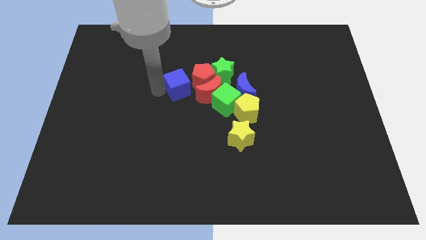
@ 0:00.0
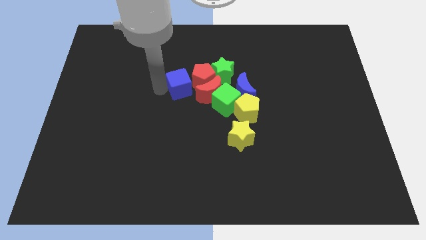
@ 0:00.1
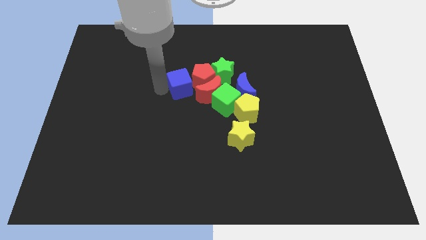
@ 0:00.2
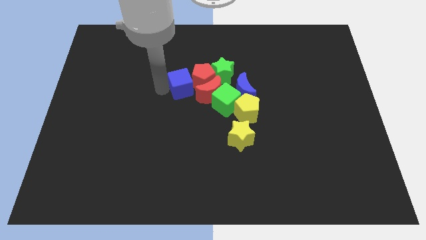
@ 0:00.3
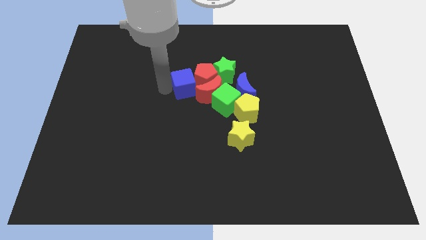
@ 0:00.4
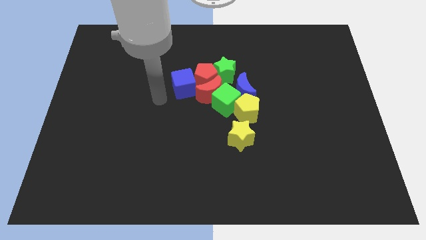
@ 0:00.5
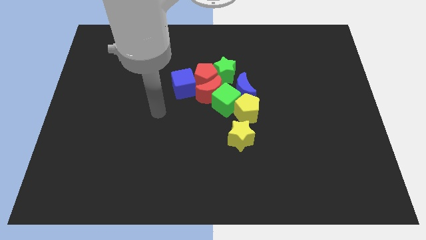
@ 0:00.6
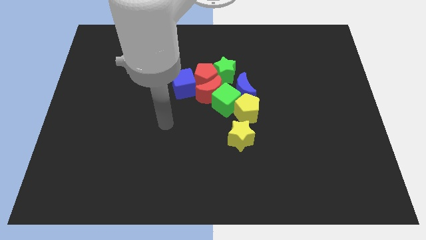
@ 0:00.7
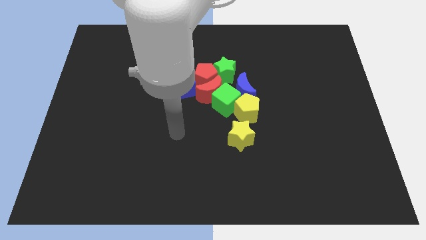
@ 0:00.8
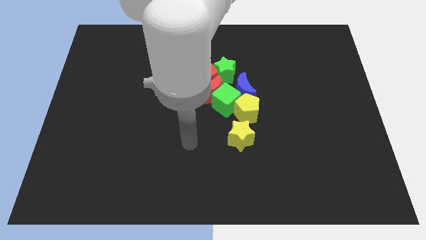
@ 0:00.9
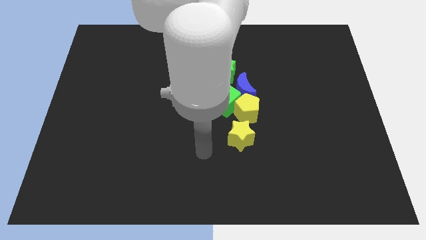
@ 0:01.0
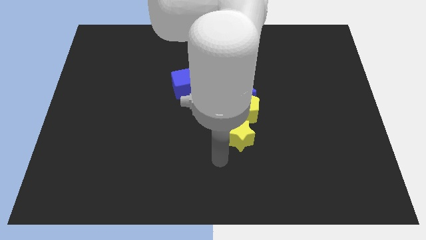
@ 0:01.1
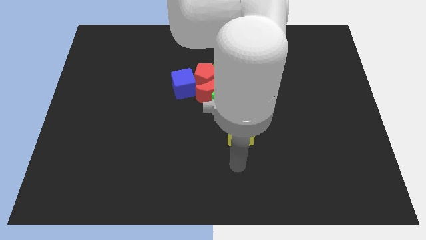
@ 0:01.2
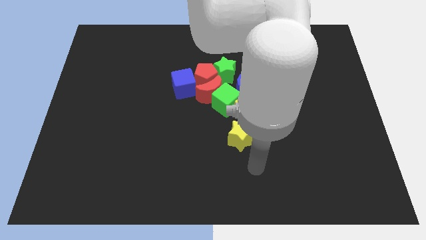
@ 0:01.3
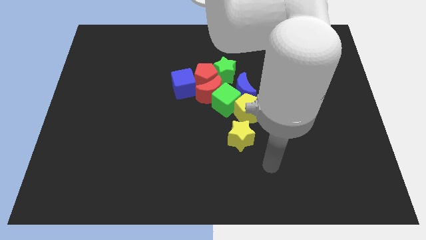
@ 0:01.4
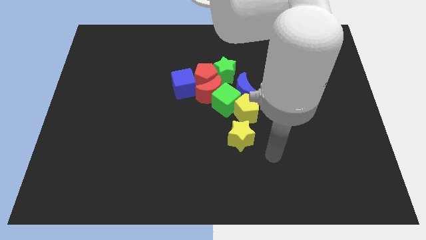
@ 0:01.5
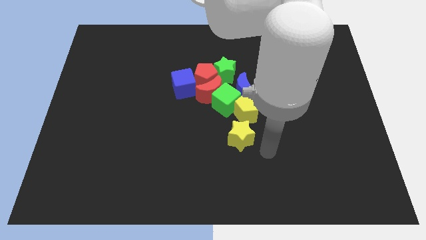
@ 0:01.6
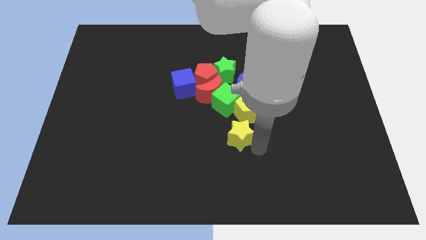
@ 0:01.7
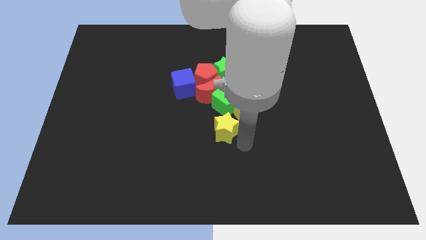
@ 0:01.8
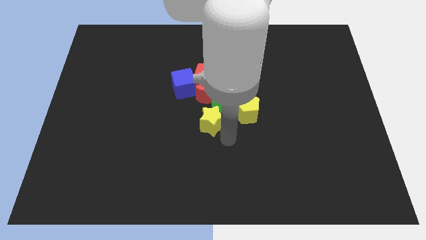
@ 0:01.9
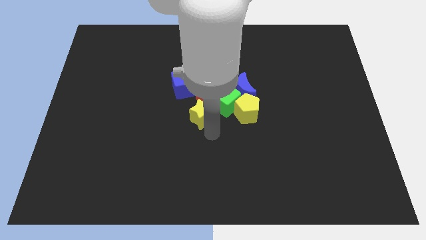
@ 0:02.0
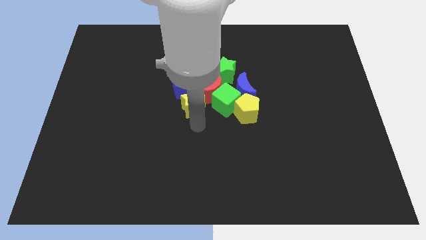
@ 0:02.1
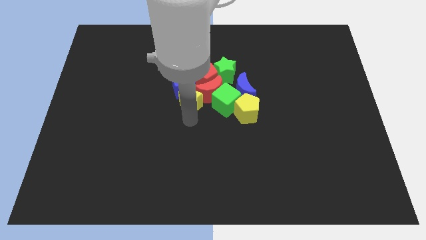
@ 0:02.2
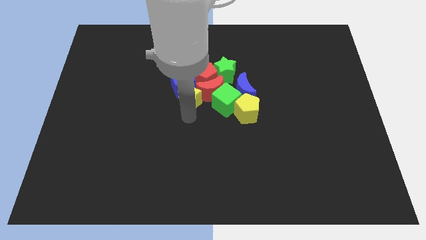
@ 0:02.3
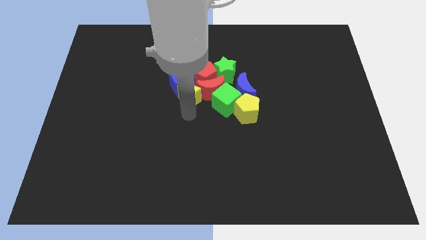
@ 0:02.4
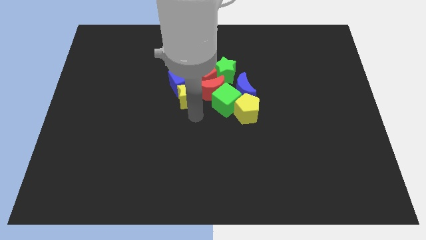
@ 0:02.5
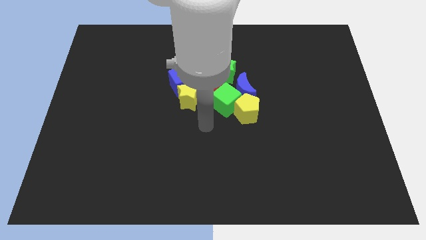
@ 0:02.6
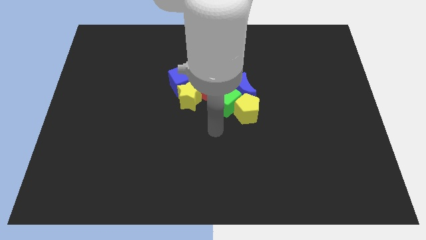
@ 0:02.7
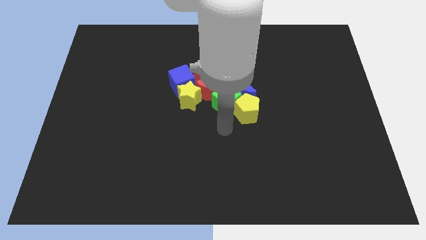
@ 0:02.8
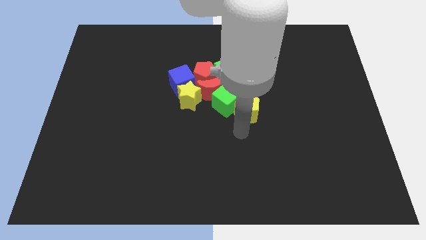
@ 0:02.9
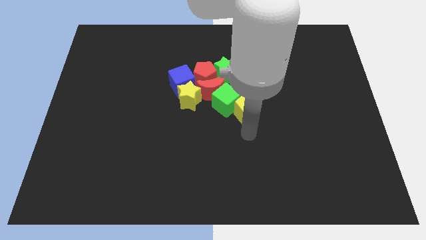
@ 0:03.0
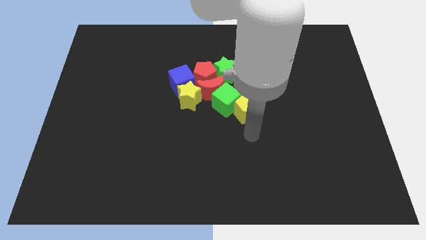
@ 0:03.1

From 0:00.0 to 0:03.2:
bring the yellow star at the bottom side of the blue cube

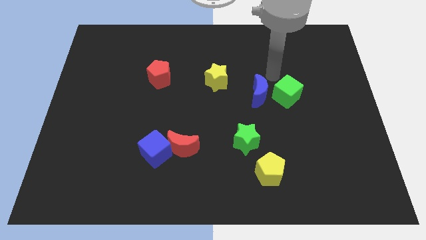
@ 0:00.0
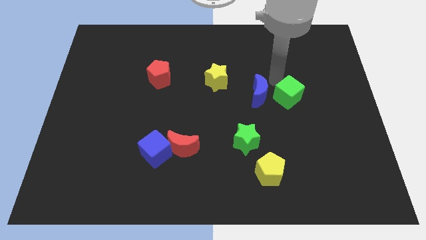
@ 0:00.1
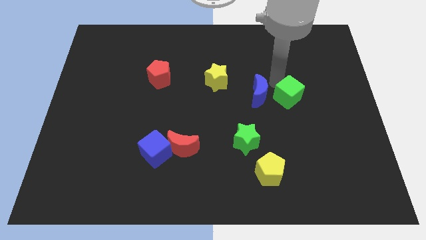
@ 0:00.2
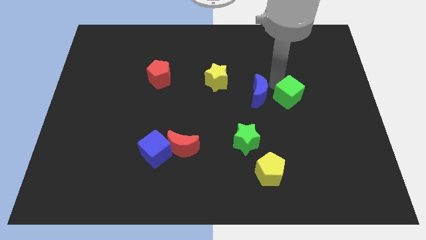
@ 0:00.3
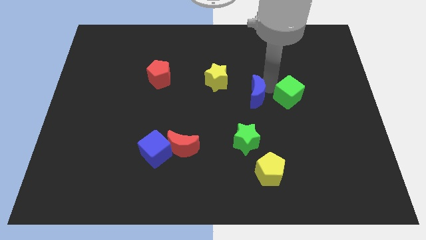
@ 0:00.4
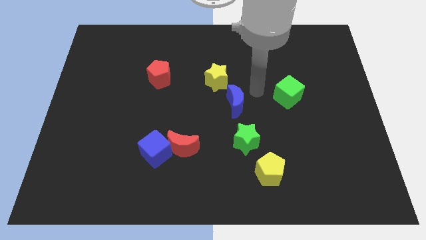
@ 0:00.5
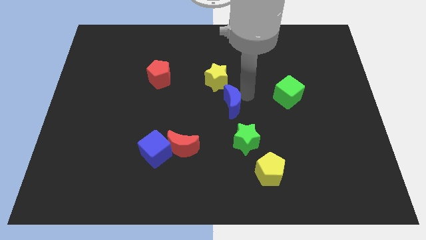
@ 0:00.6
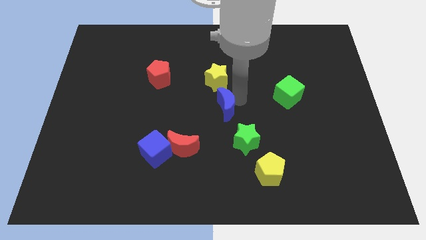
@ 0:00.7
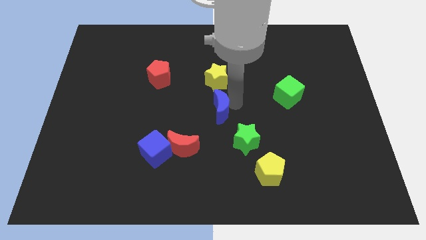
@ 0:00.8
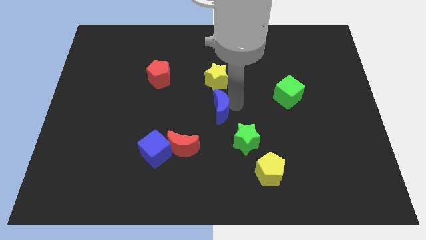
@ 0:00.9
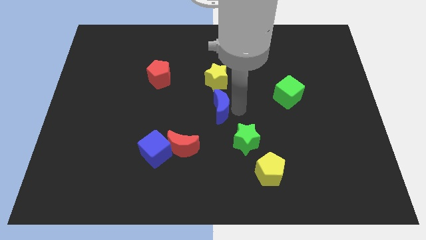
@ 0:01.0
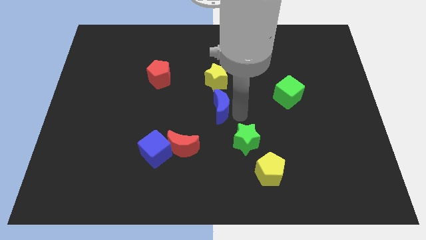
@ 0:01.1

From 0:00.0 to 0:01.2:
put the blue moon at the bottom of yellow star

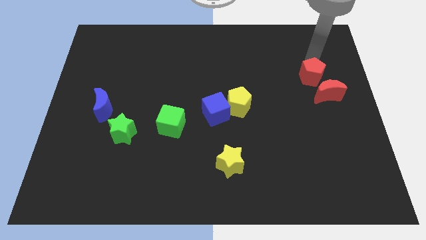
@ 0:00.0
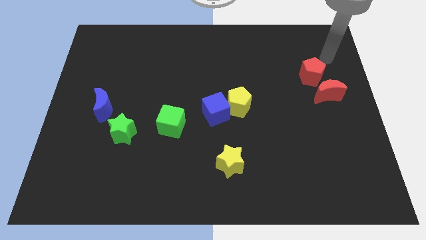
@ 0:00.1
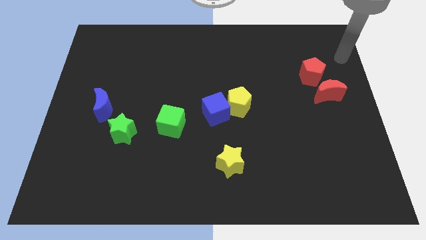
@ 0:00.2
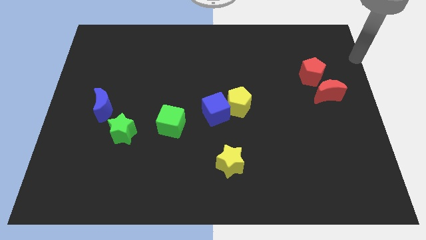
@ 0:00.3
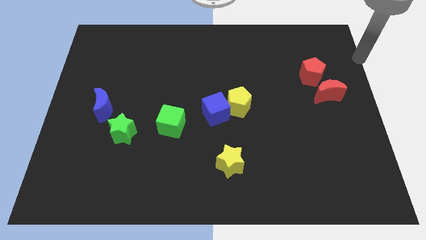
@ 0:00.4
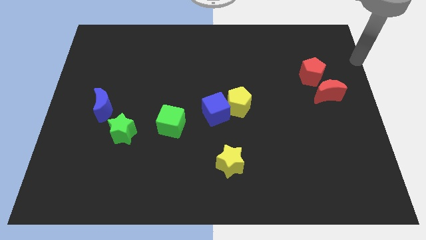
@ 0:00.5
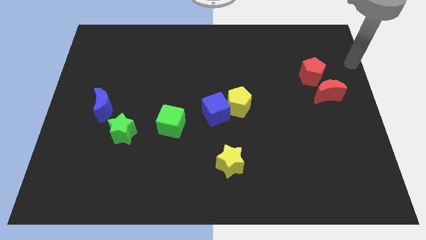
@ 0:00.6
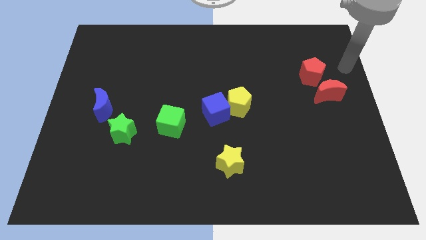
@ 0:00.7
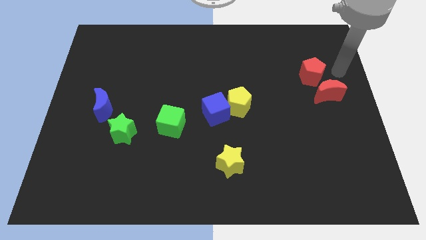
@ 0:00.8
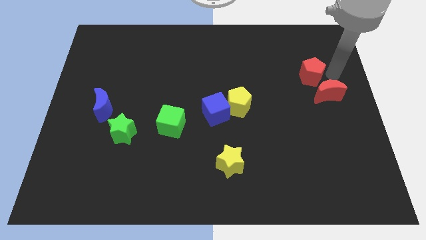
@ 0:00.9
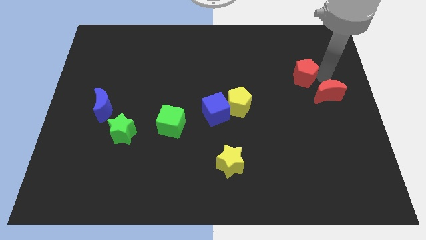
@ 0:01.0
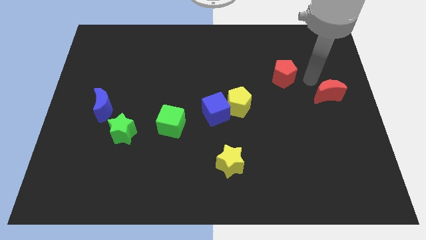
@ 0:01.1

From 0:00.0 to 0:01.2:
separate the red pentagon and the red crescent

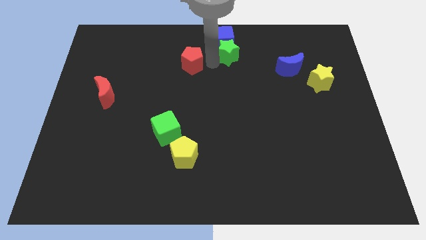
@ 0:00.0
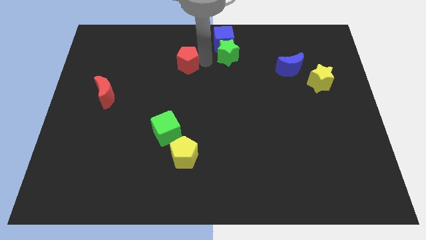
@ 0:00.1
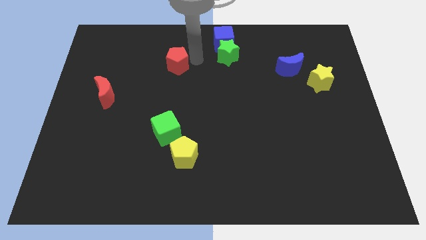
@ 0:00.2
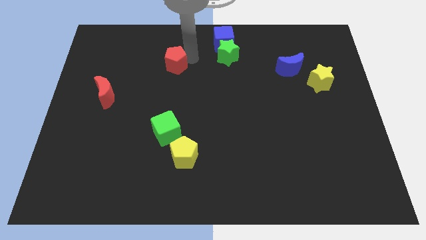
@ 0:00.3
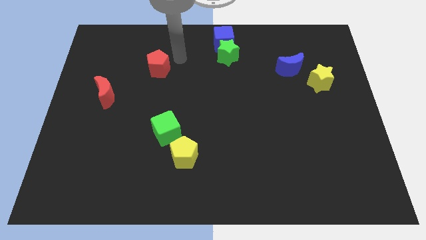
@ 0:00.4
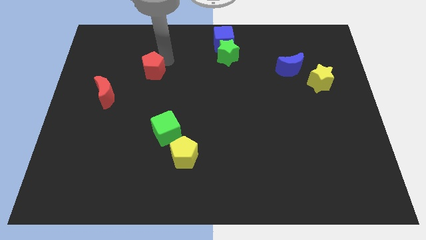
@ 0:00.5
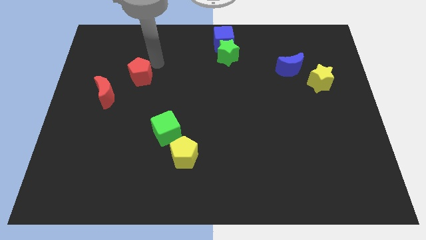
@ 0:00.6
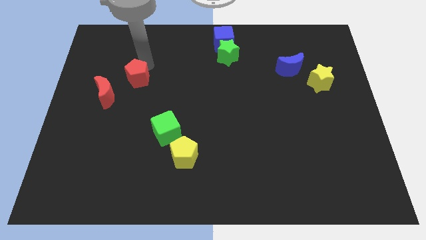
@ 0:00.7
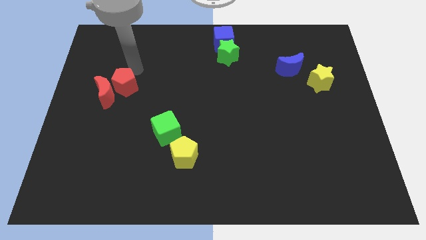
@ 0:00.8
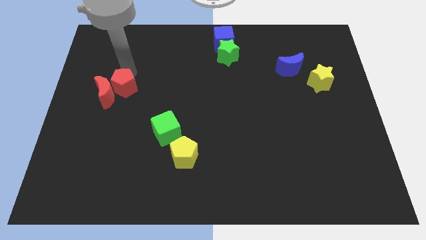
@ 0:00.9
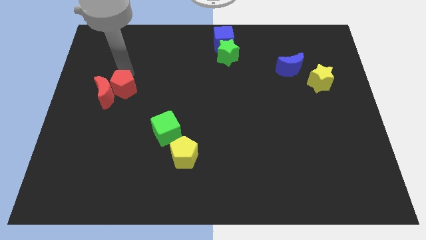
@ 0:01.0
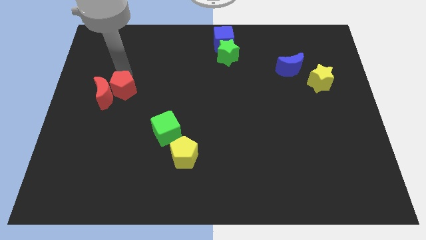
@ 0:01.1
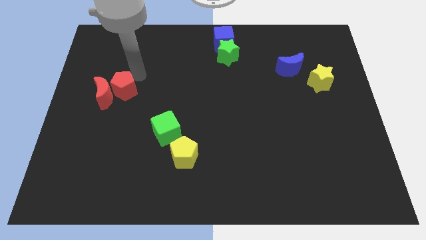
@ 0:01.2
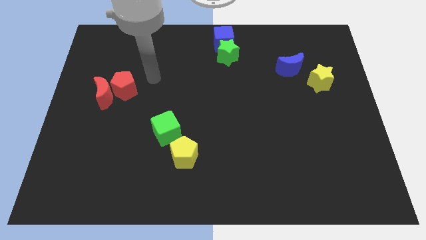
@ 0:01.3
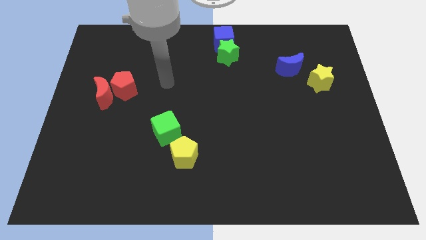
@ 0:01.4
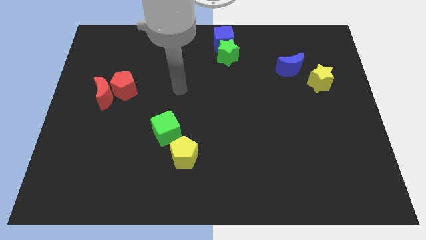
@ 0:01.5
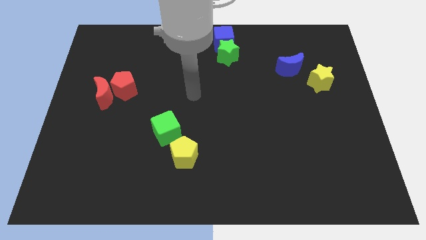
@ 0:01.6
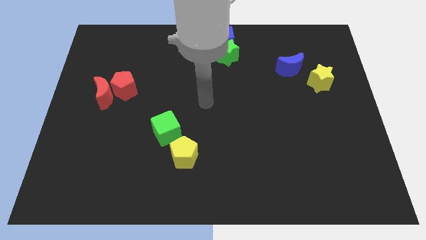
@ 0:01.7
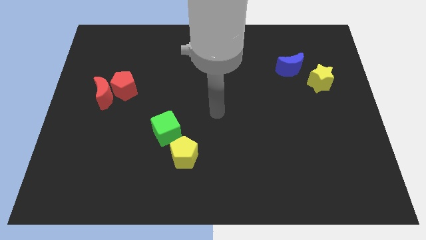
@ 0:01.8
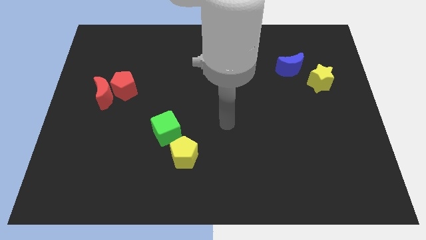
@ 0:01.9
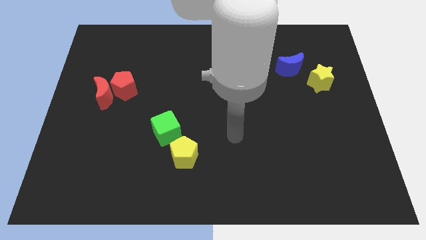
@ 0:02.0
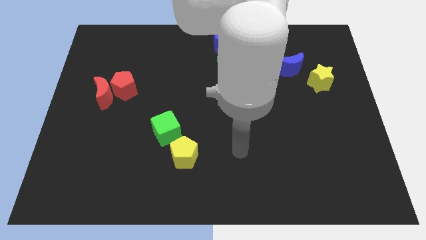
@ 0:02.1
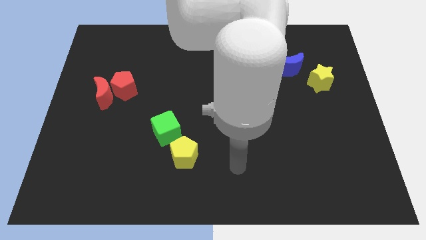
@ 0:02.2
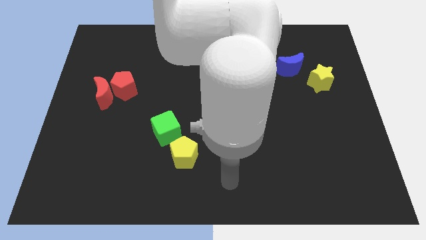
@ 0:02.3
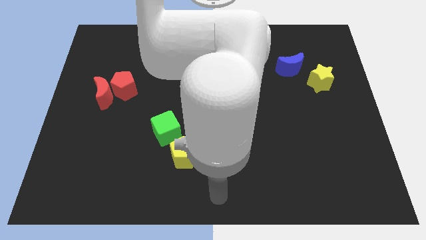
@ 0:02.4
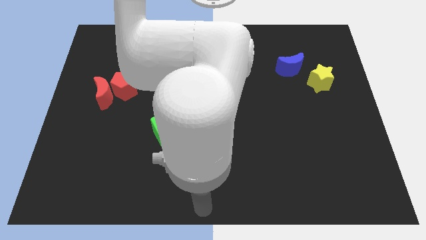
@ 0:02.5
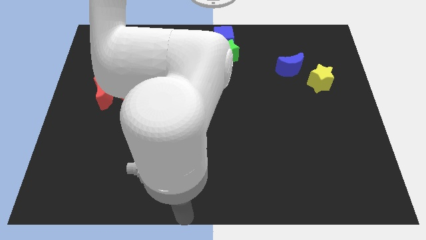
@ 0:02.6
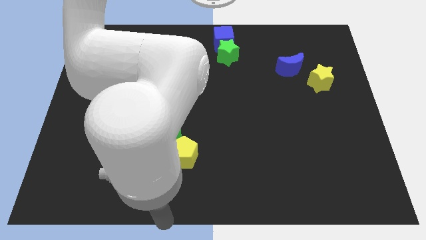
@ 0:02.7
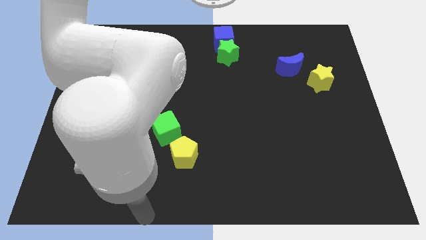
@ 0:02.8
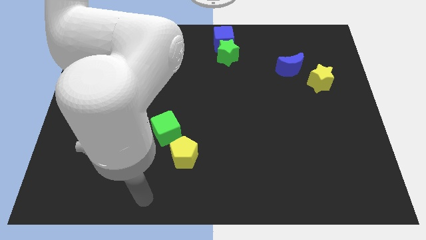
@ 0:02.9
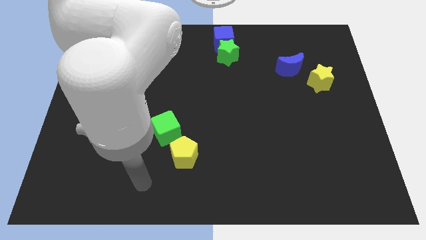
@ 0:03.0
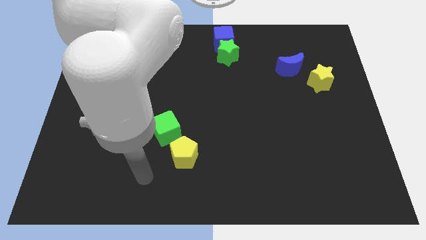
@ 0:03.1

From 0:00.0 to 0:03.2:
place the red pentagon close to the red moon
